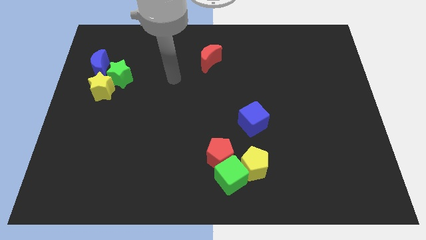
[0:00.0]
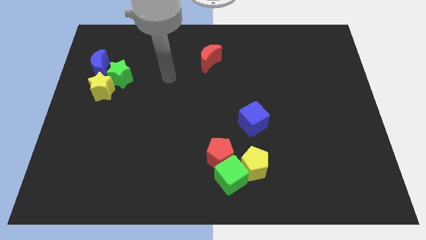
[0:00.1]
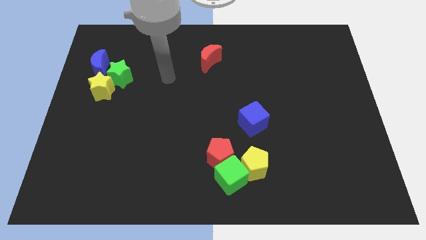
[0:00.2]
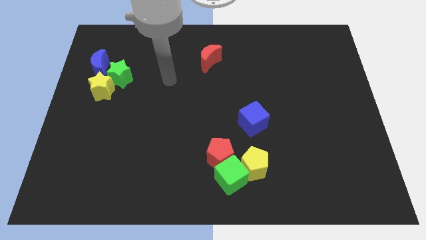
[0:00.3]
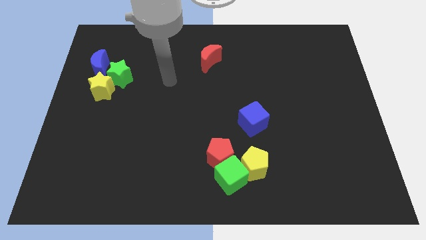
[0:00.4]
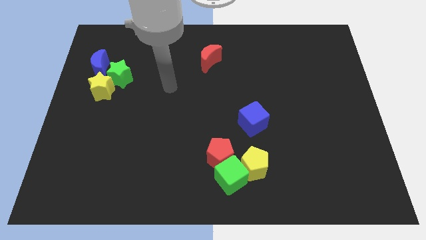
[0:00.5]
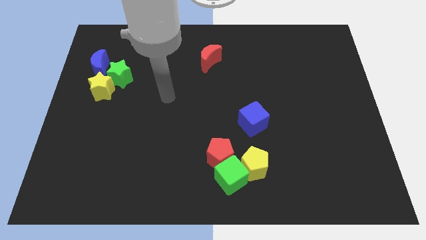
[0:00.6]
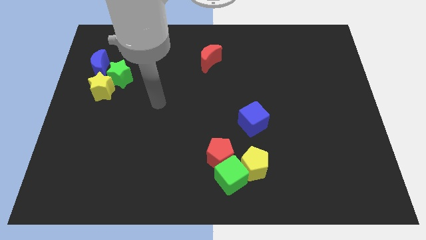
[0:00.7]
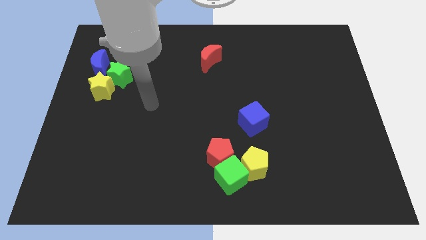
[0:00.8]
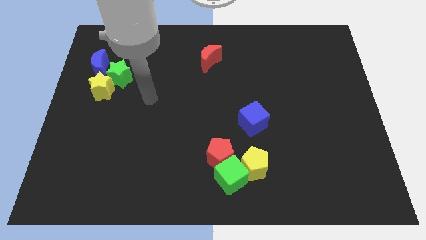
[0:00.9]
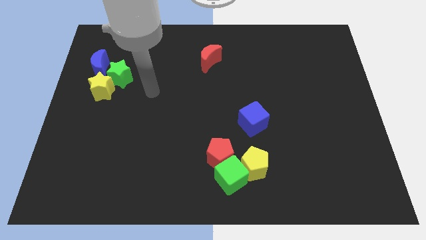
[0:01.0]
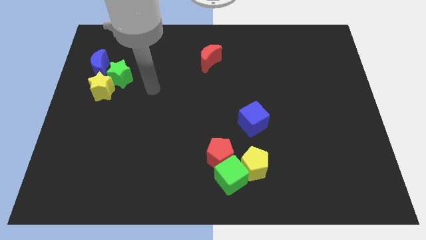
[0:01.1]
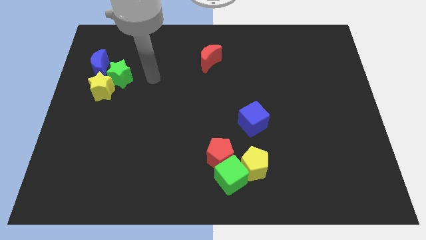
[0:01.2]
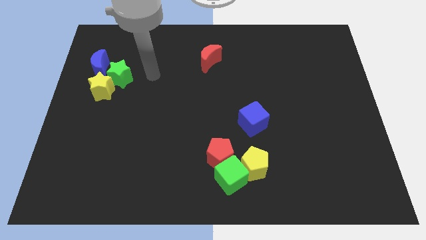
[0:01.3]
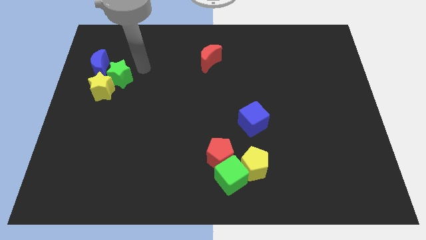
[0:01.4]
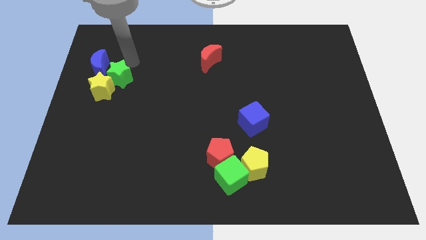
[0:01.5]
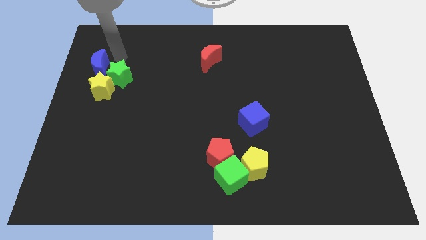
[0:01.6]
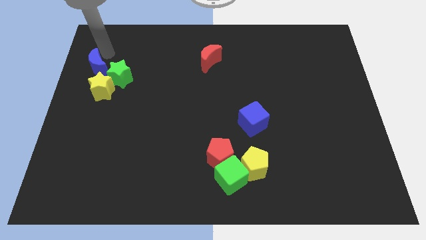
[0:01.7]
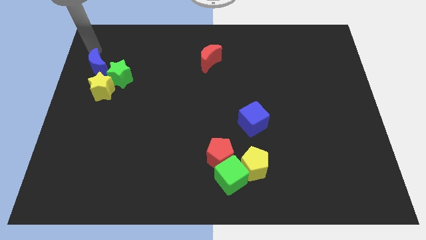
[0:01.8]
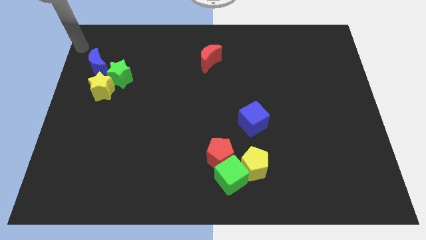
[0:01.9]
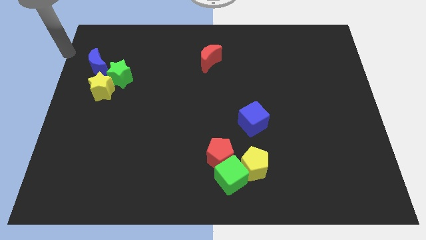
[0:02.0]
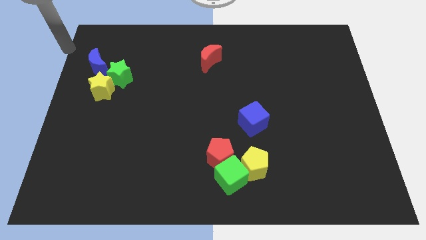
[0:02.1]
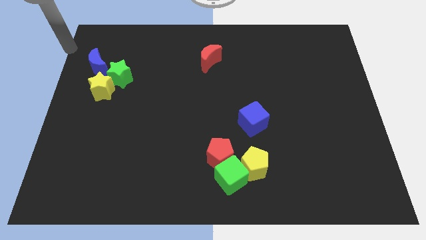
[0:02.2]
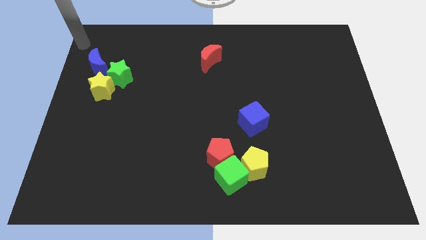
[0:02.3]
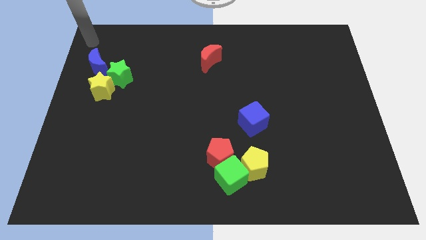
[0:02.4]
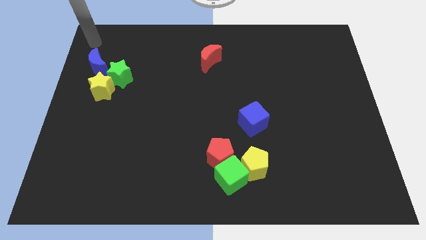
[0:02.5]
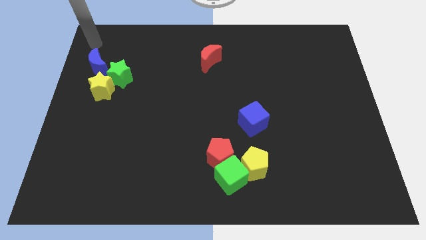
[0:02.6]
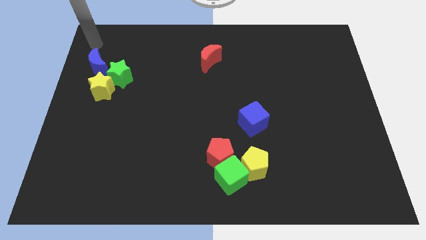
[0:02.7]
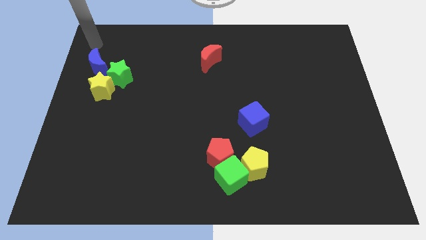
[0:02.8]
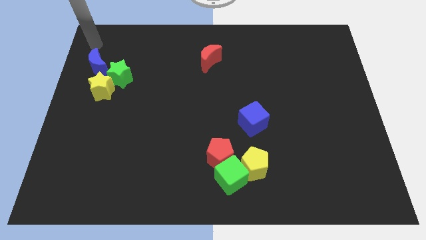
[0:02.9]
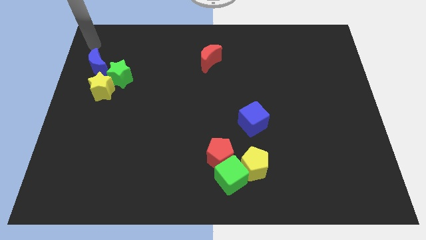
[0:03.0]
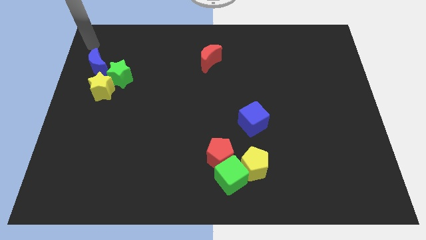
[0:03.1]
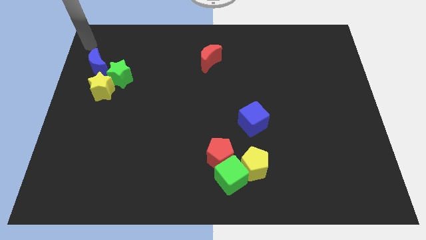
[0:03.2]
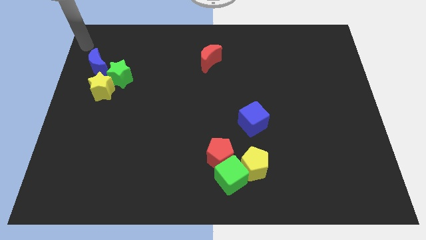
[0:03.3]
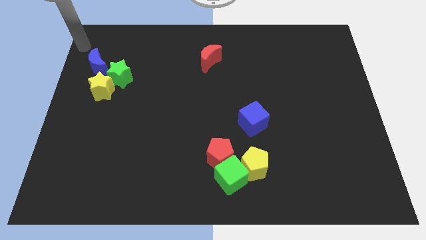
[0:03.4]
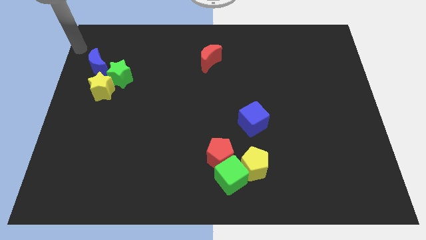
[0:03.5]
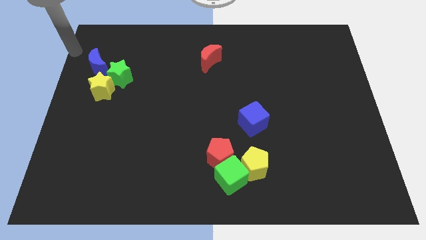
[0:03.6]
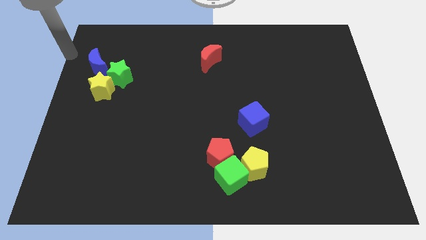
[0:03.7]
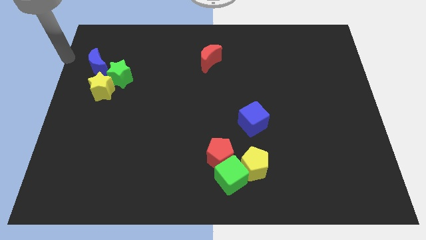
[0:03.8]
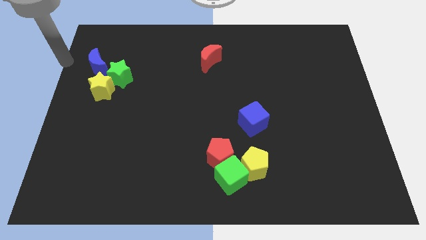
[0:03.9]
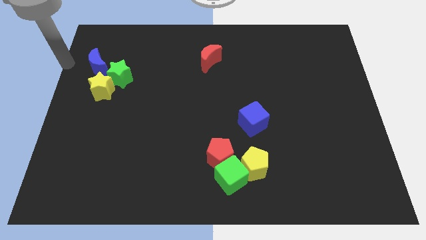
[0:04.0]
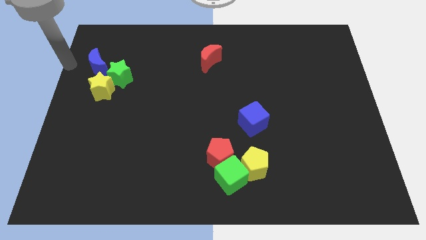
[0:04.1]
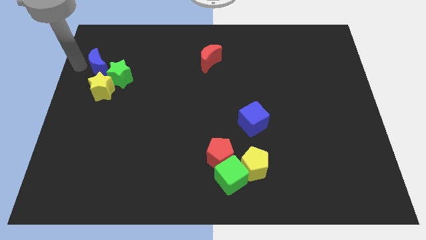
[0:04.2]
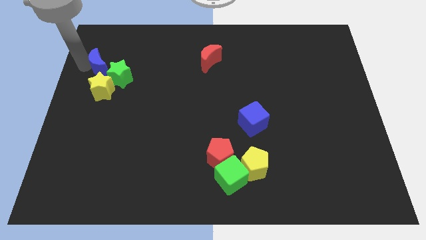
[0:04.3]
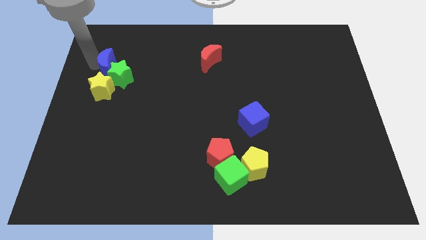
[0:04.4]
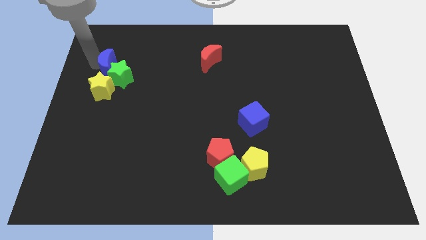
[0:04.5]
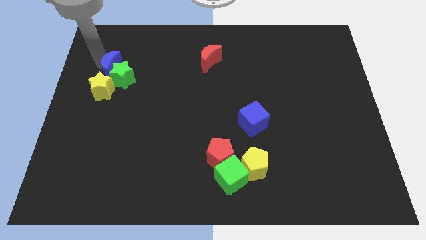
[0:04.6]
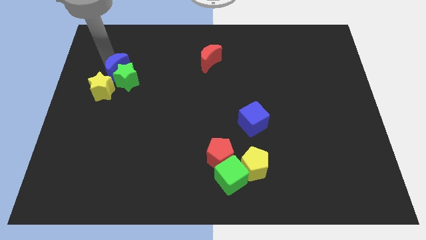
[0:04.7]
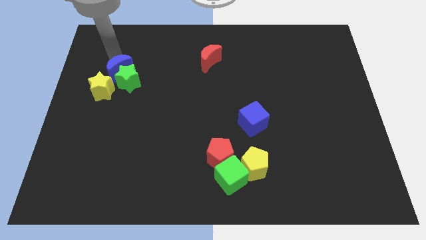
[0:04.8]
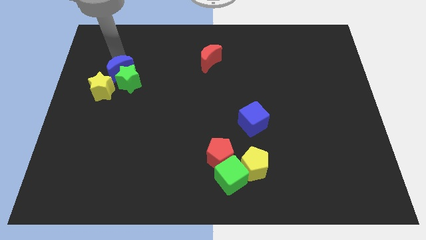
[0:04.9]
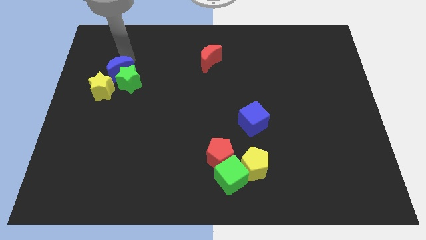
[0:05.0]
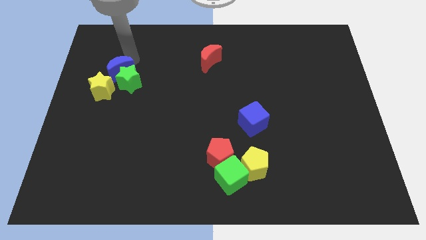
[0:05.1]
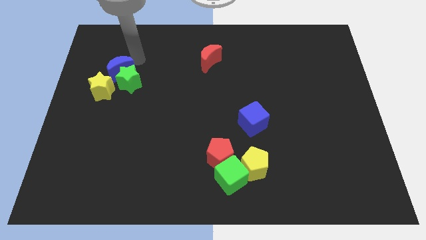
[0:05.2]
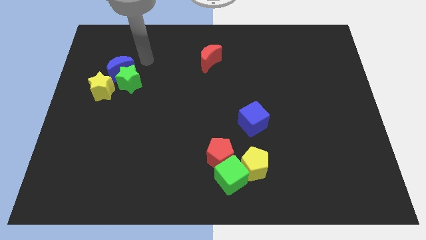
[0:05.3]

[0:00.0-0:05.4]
slightly move the blue crescent into the green star

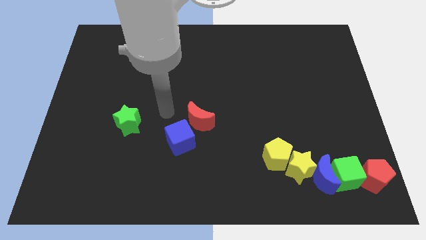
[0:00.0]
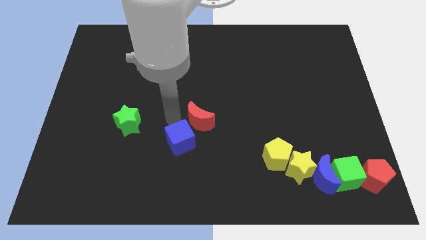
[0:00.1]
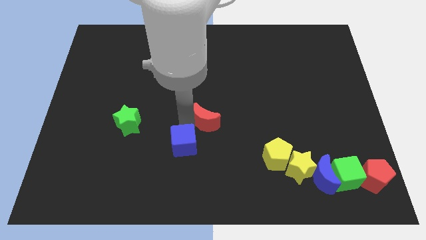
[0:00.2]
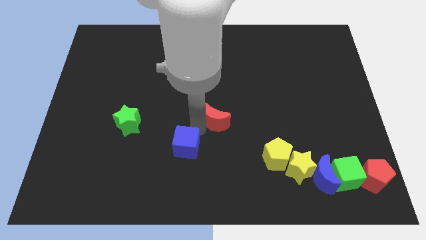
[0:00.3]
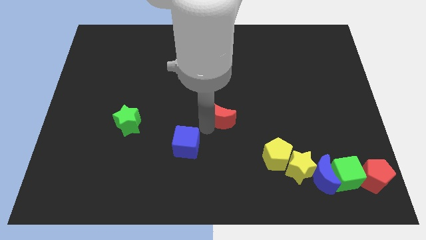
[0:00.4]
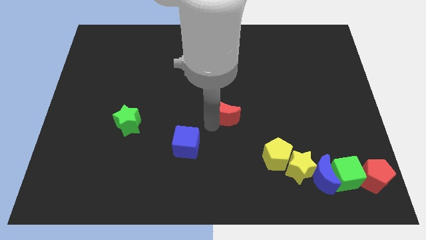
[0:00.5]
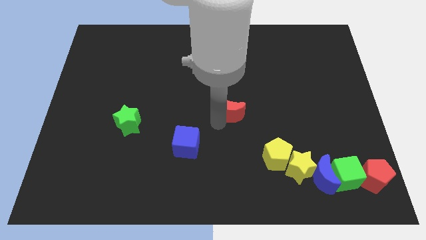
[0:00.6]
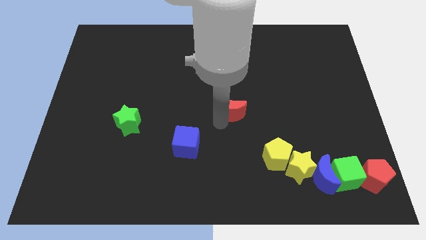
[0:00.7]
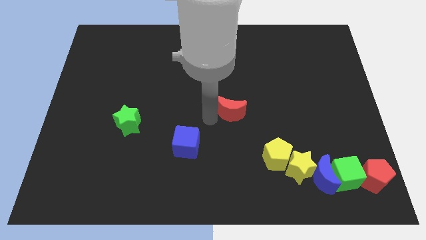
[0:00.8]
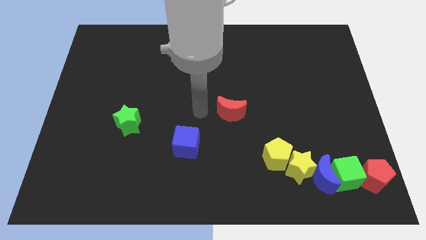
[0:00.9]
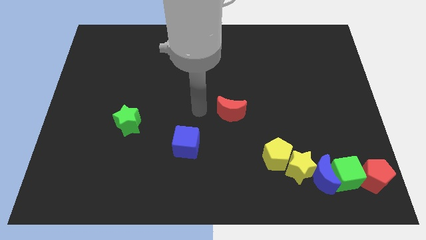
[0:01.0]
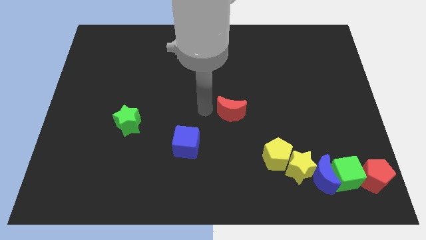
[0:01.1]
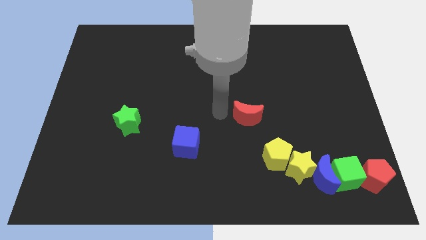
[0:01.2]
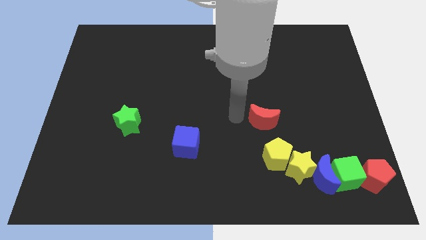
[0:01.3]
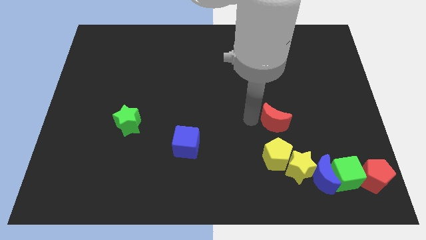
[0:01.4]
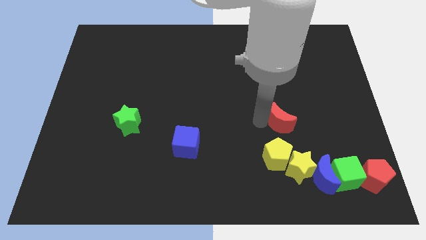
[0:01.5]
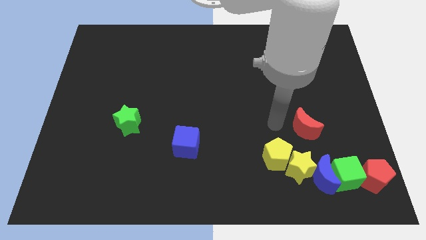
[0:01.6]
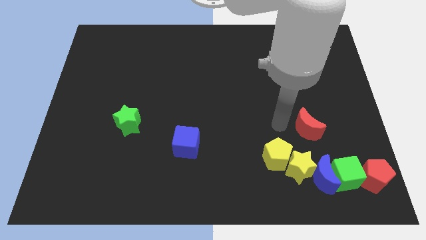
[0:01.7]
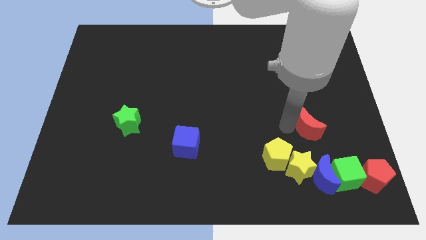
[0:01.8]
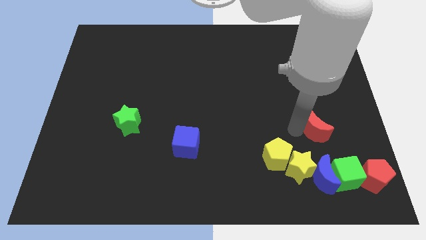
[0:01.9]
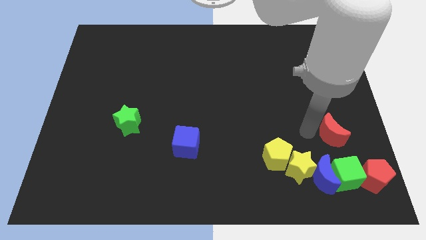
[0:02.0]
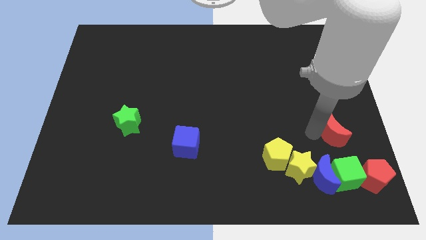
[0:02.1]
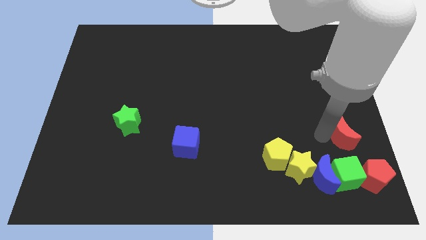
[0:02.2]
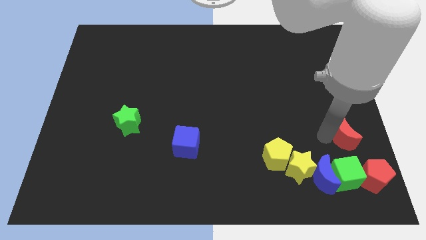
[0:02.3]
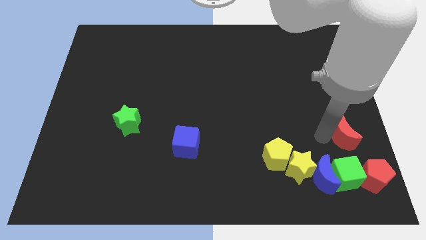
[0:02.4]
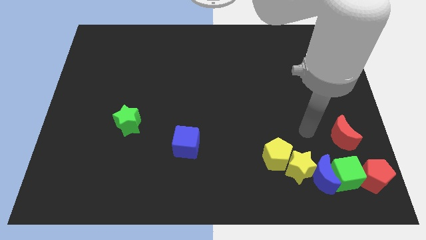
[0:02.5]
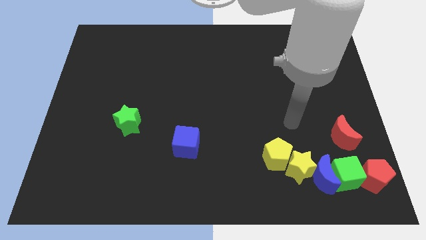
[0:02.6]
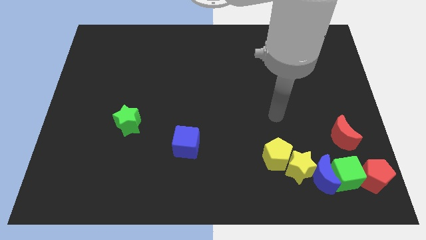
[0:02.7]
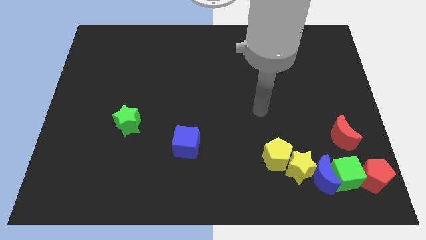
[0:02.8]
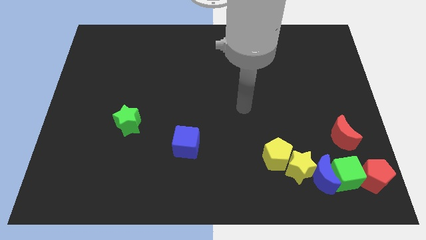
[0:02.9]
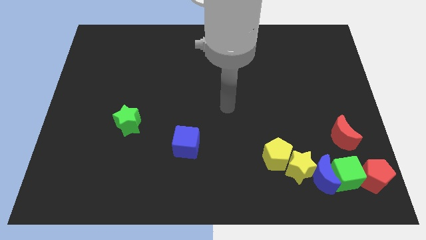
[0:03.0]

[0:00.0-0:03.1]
separate red moon from blue cube

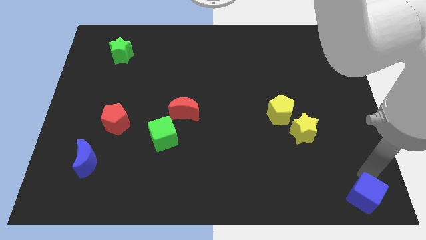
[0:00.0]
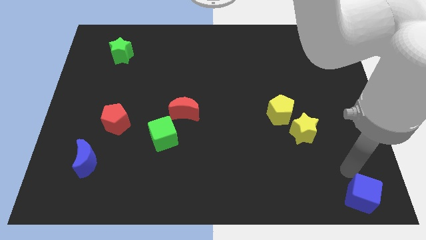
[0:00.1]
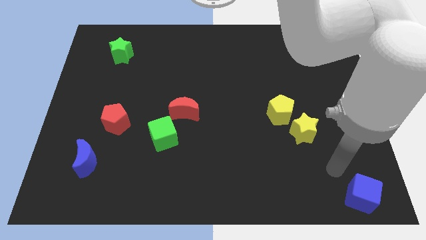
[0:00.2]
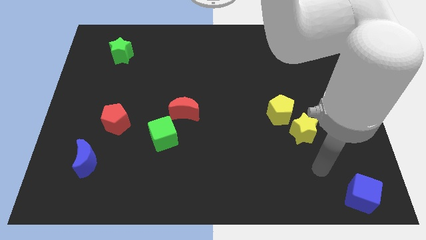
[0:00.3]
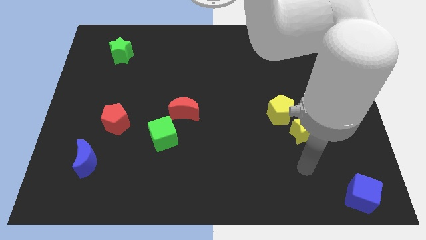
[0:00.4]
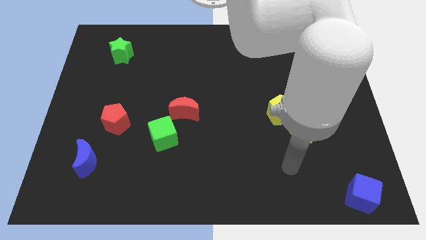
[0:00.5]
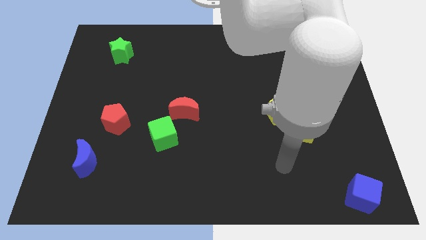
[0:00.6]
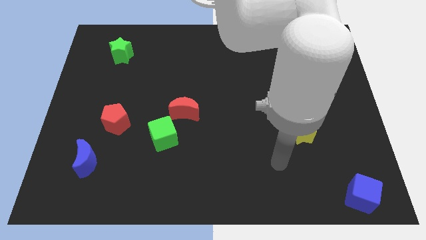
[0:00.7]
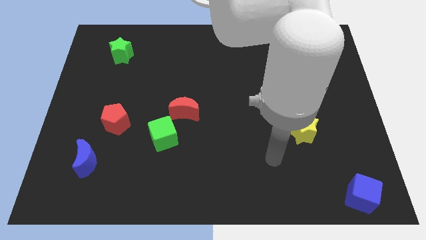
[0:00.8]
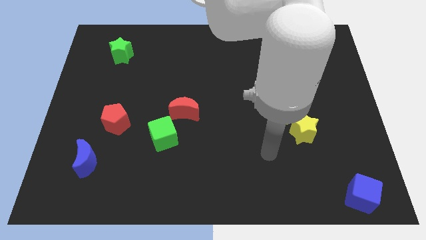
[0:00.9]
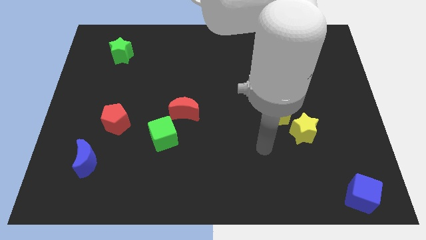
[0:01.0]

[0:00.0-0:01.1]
slide your arm away from blue cube
